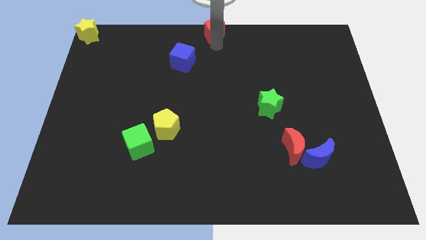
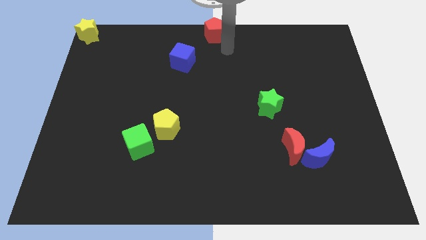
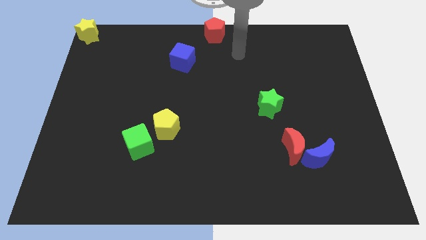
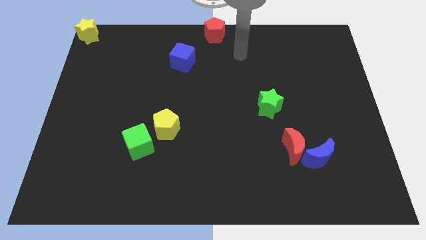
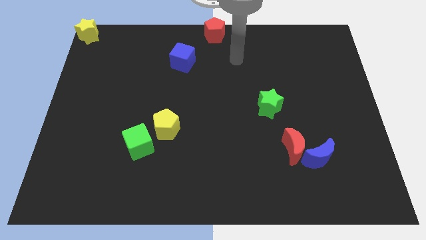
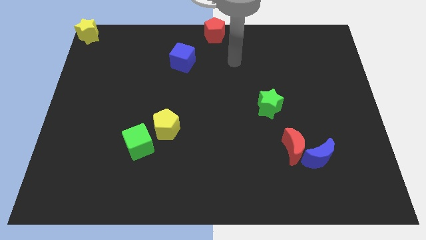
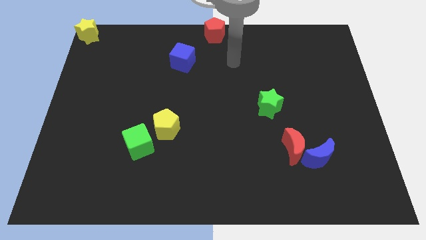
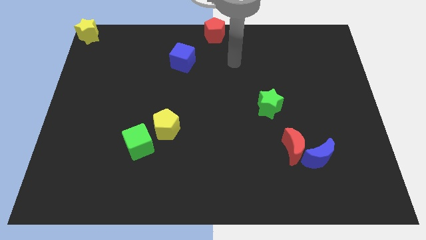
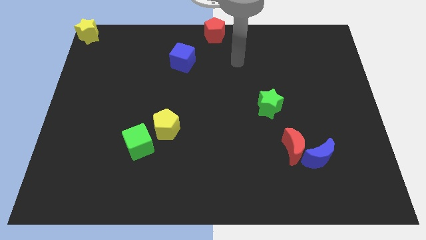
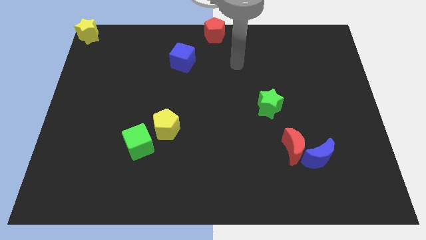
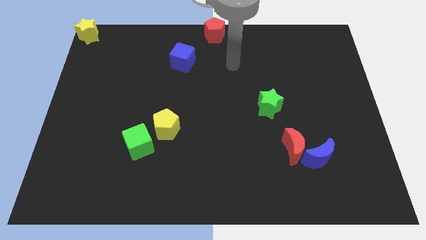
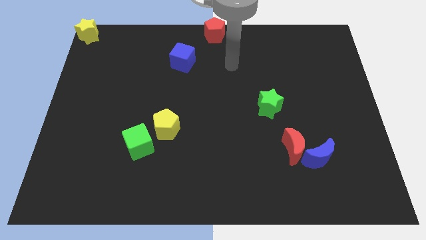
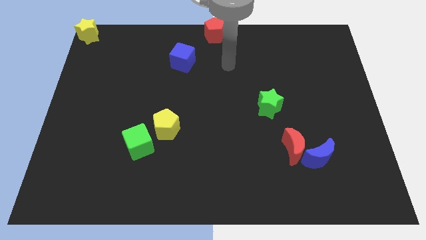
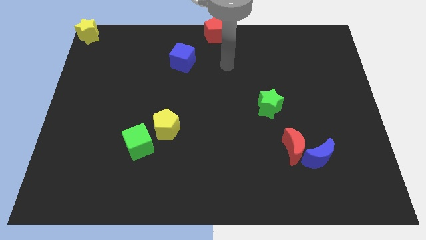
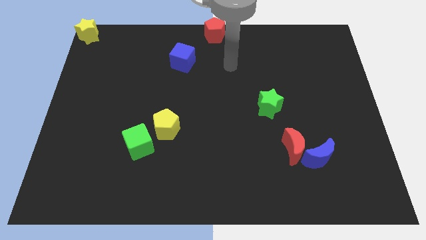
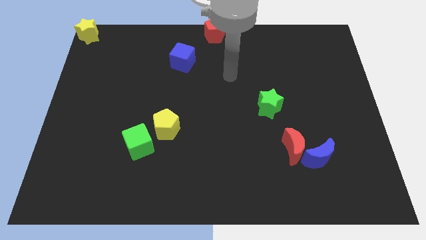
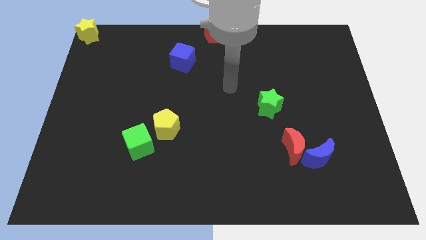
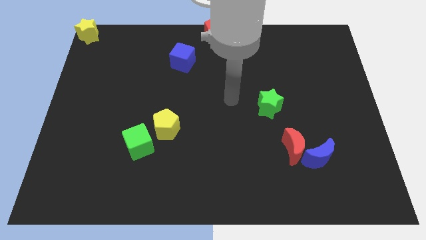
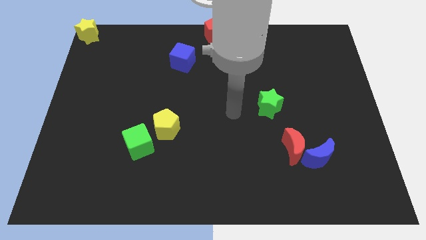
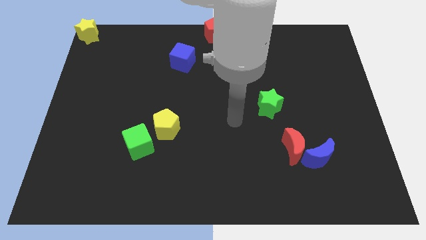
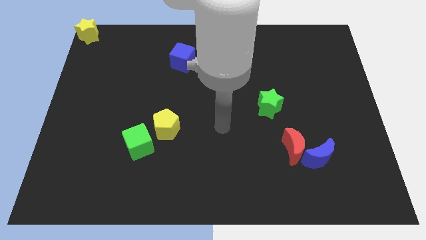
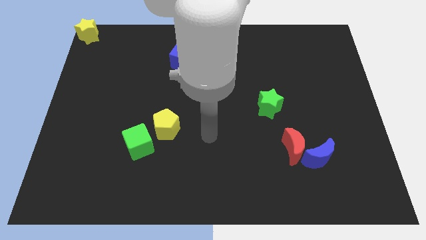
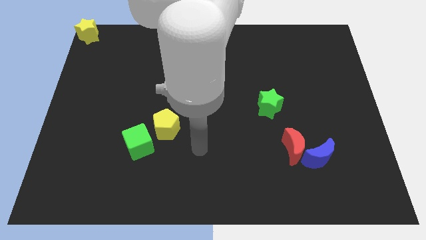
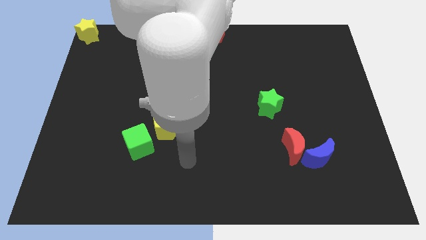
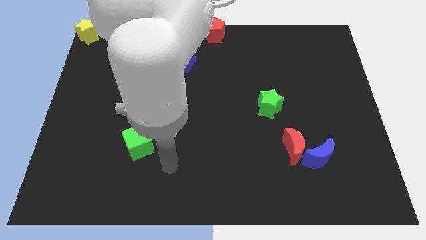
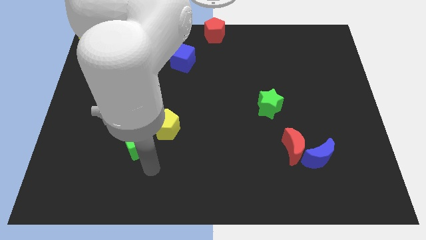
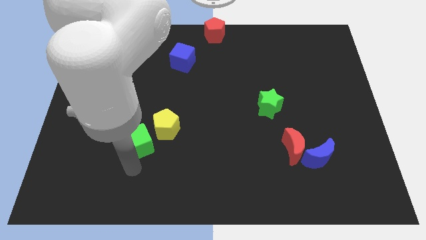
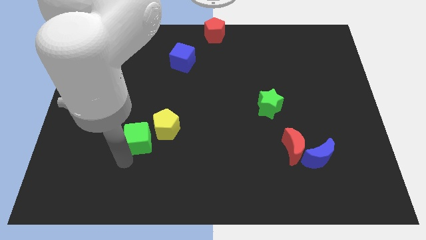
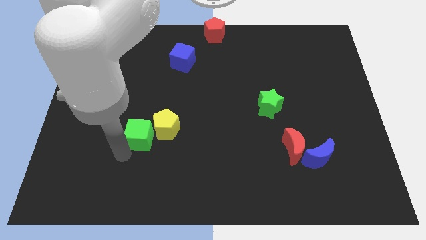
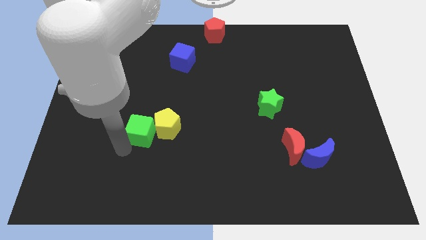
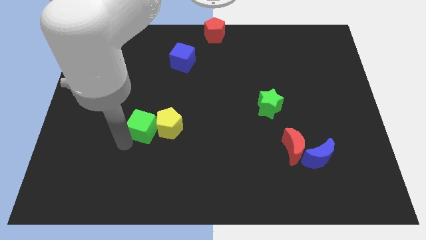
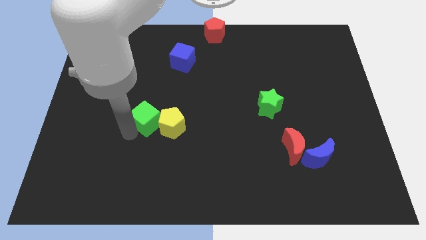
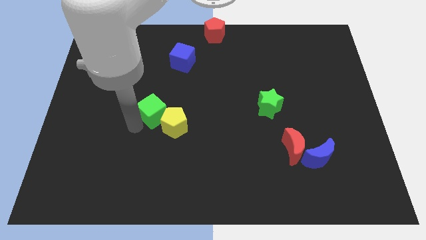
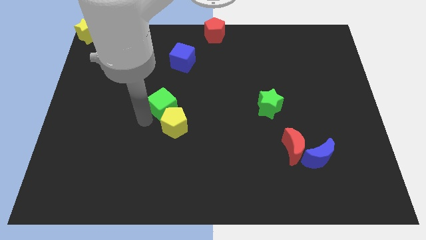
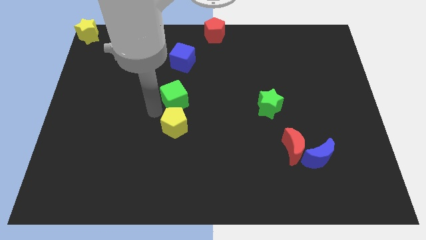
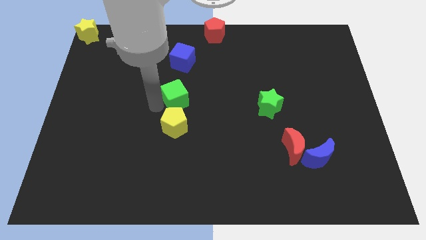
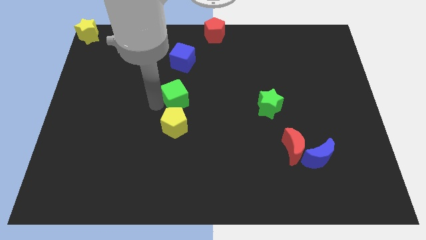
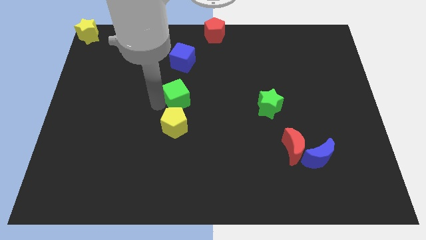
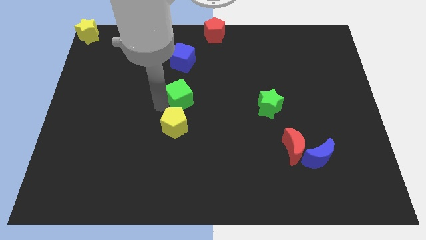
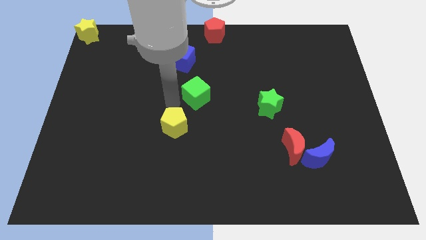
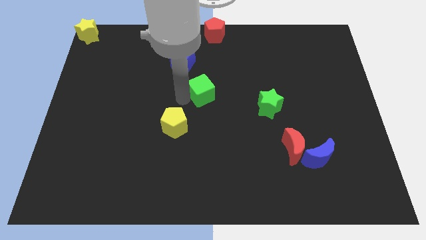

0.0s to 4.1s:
move green cube towards the center

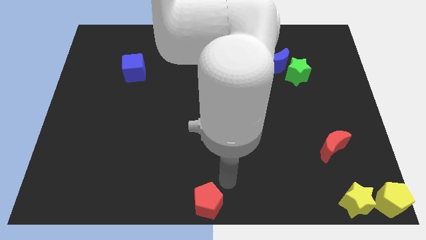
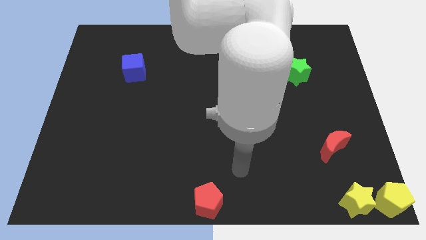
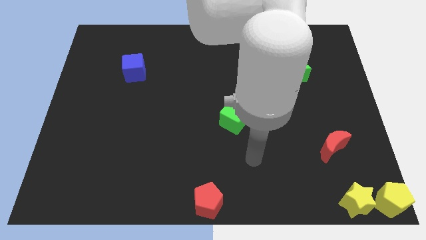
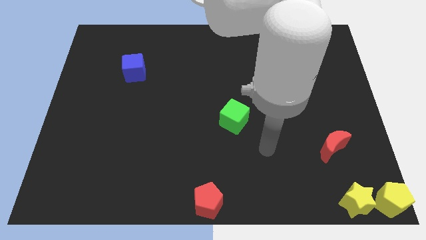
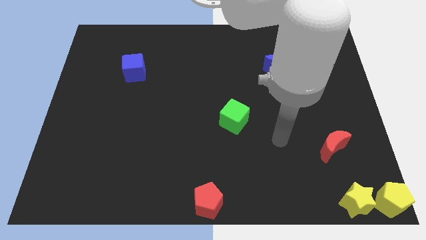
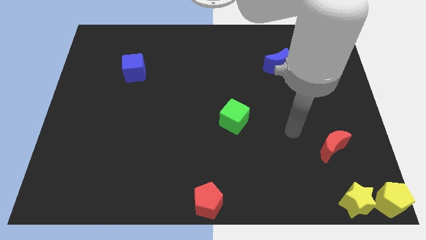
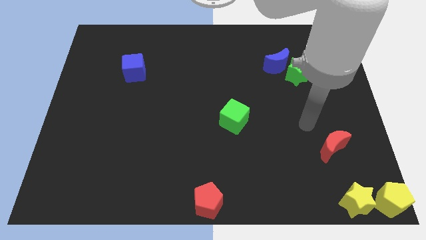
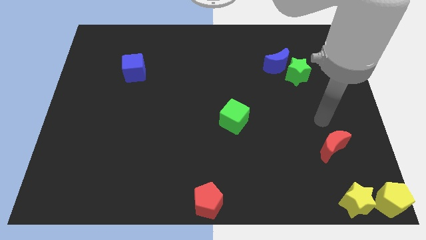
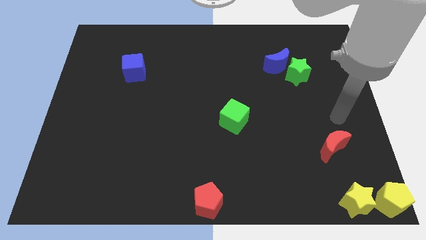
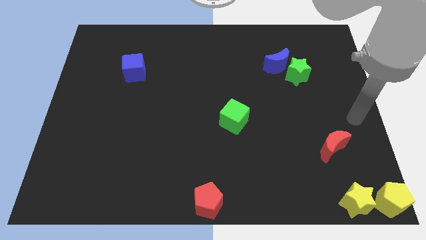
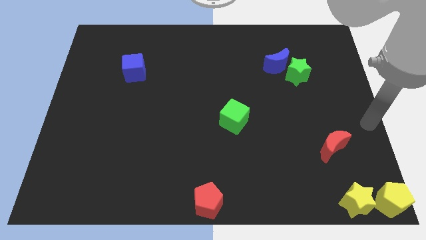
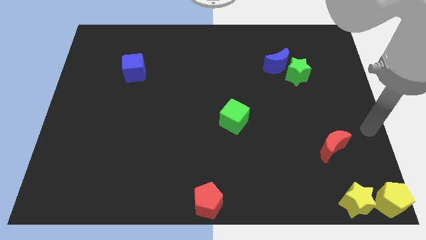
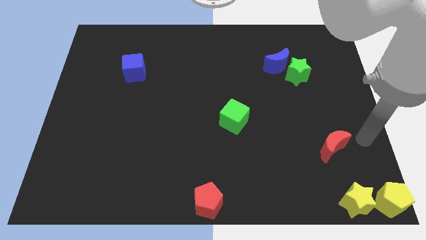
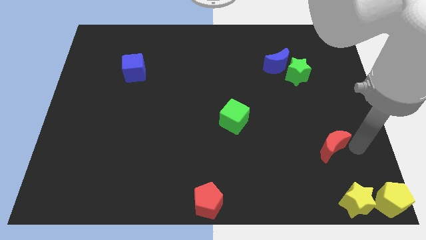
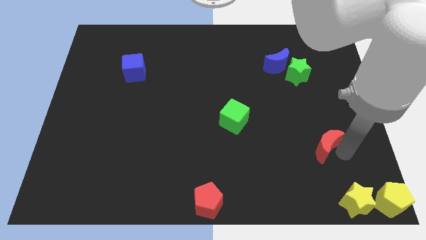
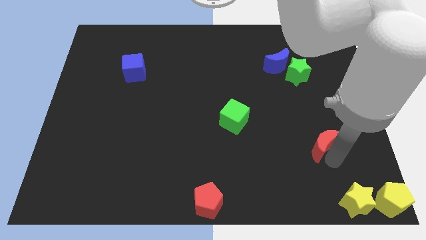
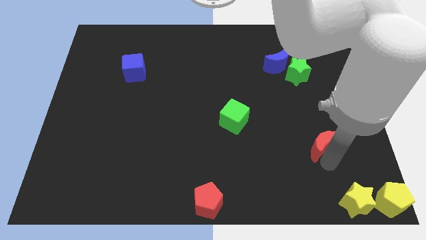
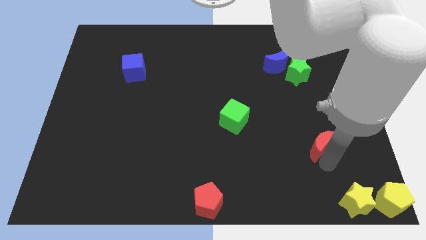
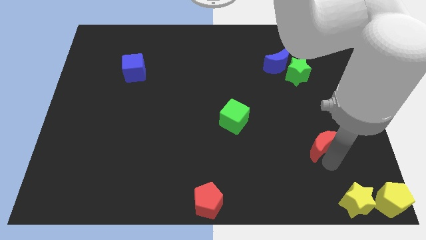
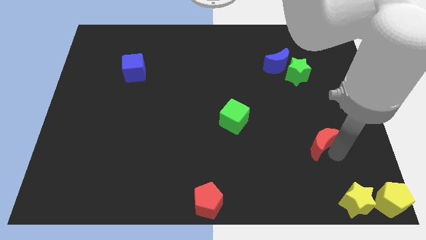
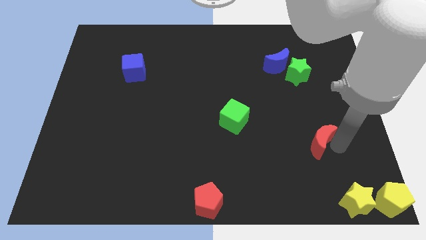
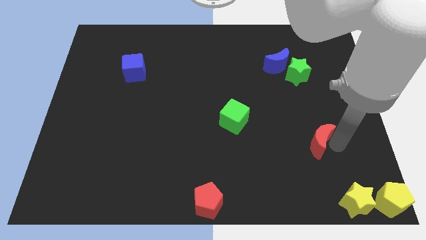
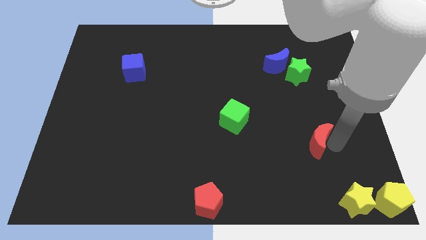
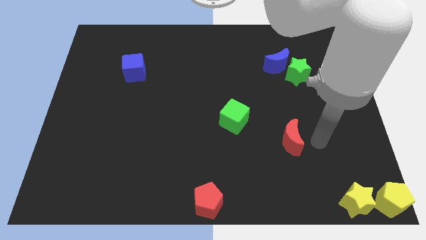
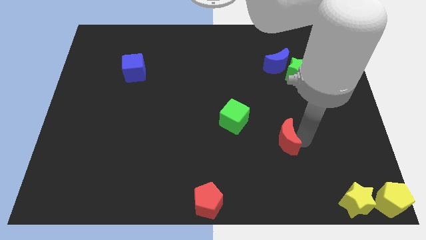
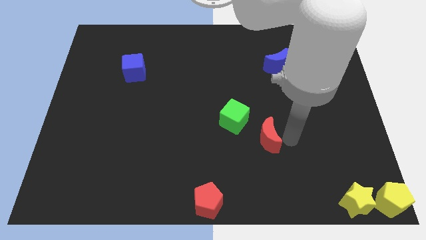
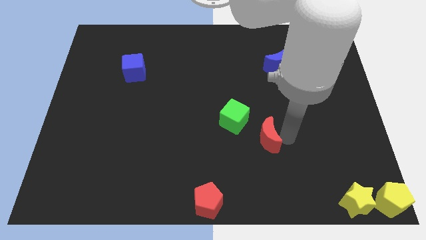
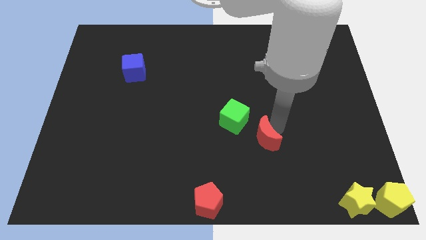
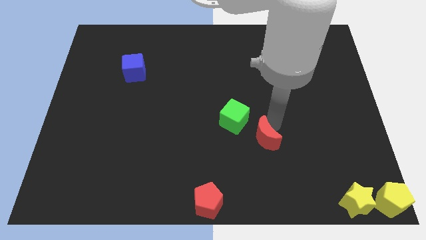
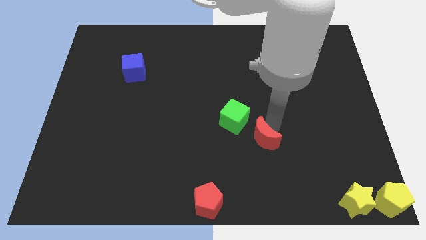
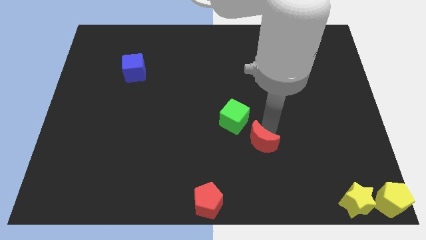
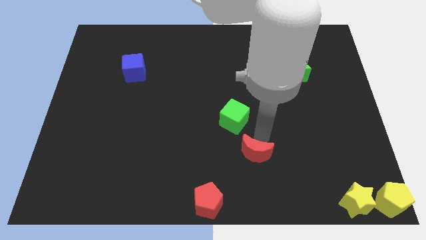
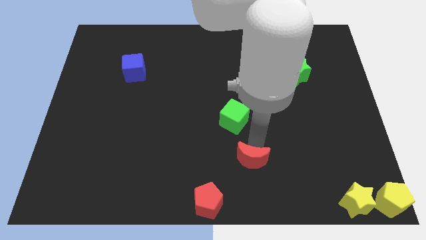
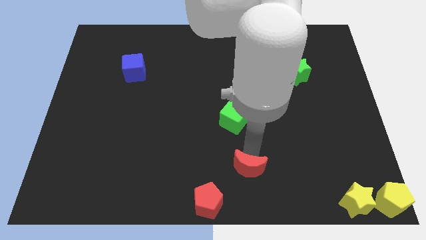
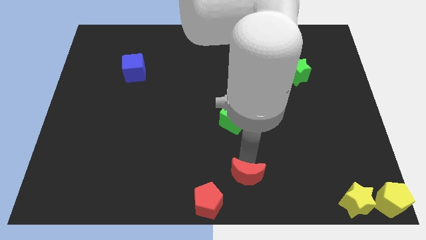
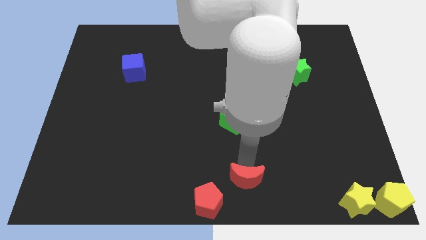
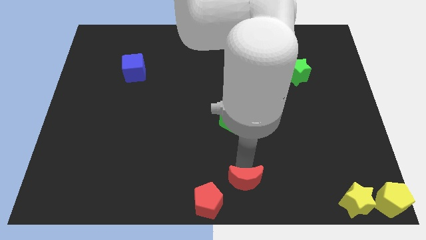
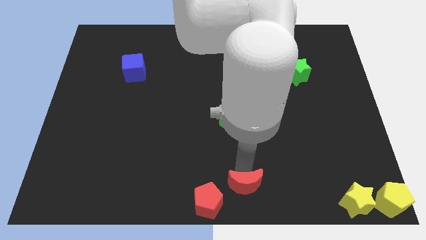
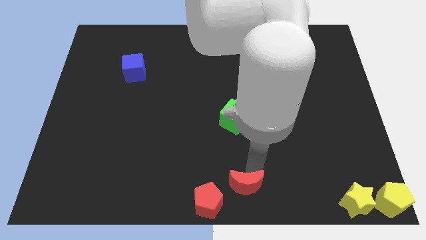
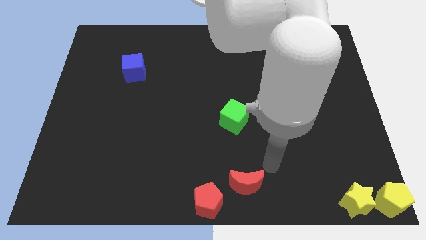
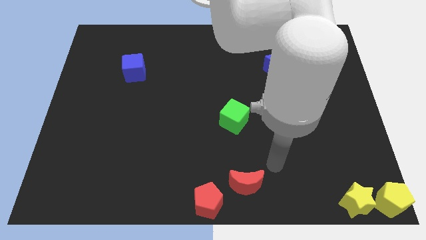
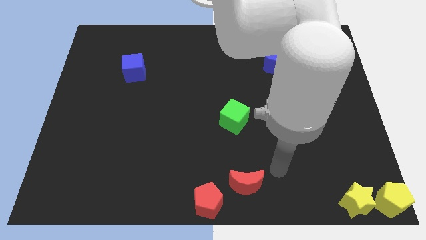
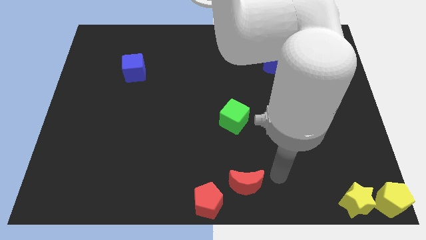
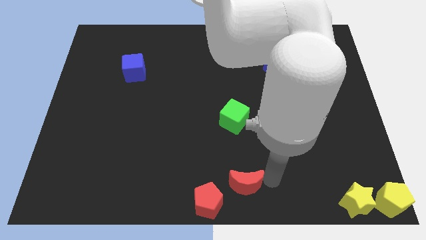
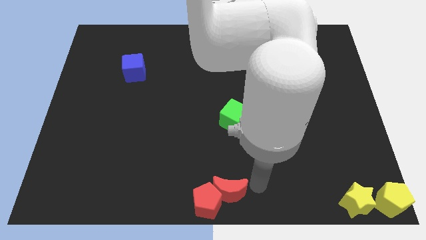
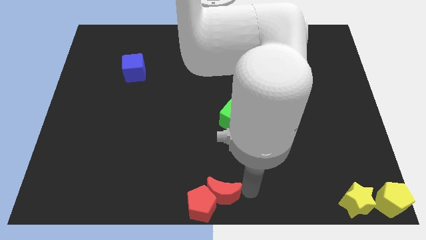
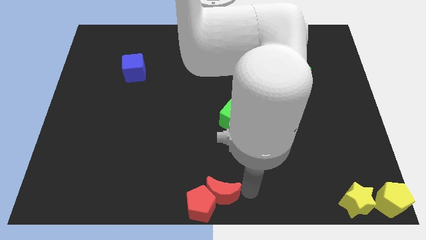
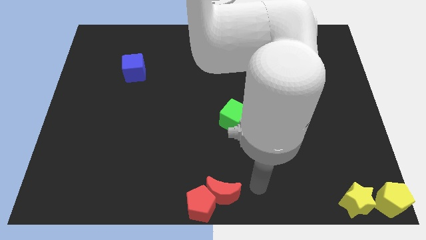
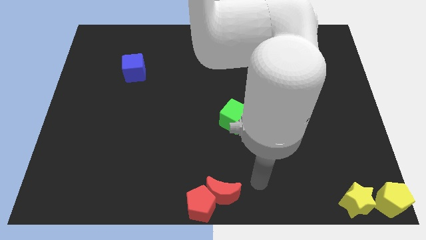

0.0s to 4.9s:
push the red moon into the red pentagon
